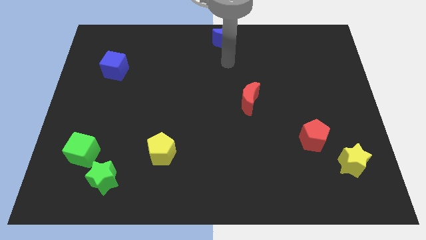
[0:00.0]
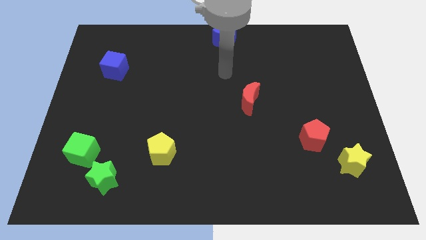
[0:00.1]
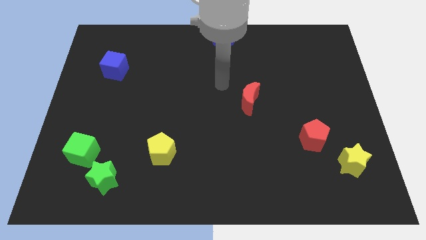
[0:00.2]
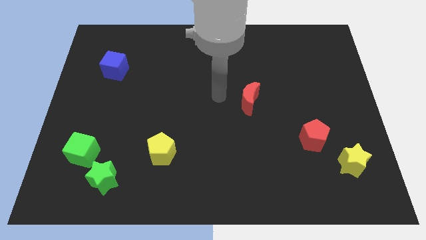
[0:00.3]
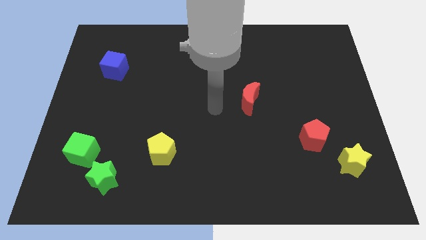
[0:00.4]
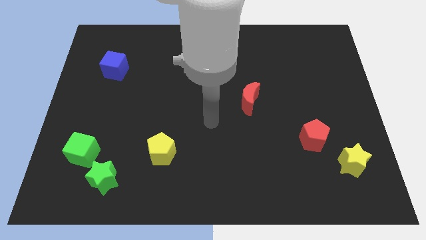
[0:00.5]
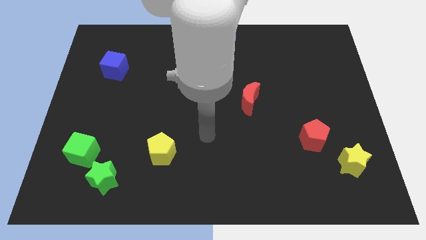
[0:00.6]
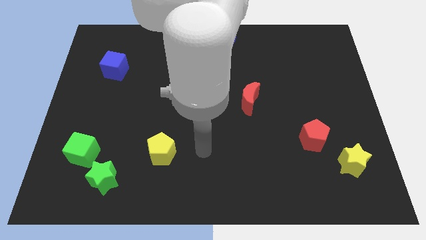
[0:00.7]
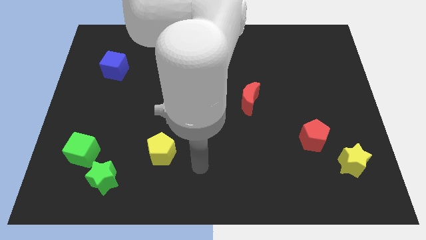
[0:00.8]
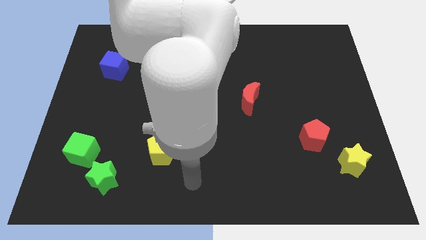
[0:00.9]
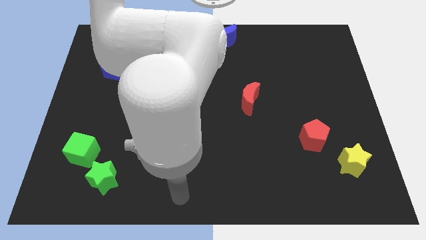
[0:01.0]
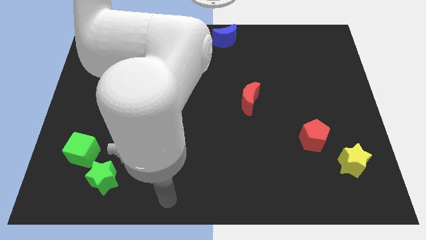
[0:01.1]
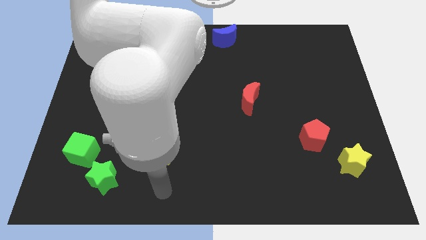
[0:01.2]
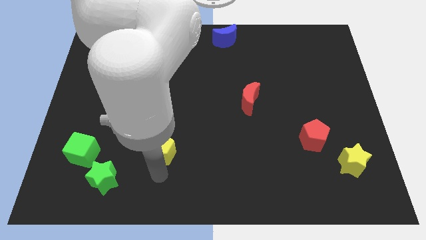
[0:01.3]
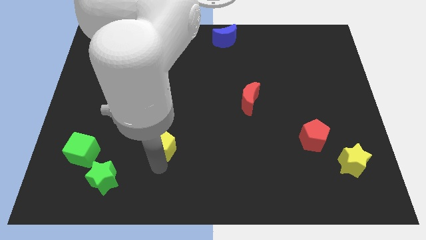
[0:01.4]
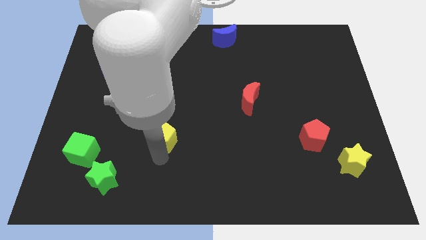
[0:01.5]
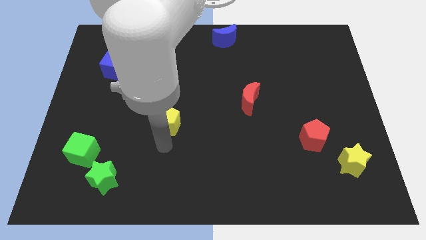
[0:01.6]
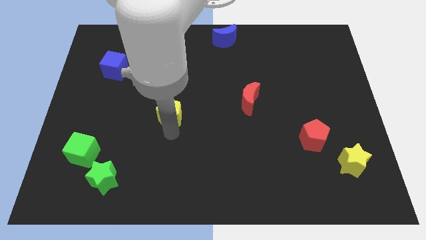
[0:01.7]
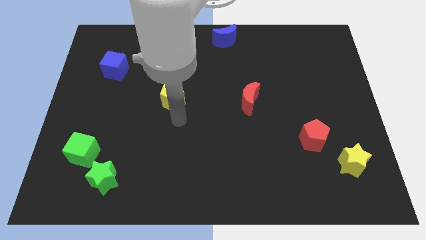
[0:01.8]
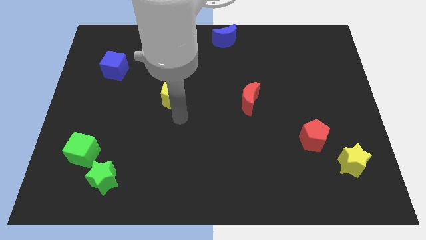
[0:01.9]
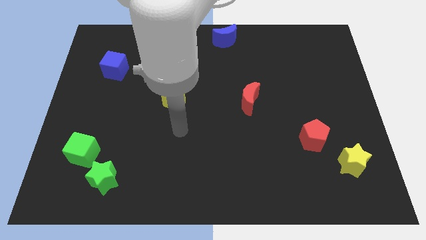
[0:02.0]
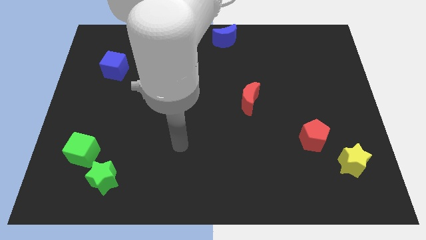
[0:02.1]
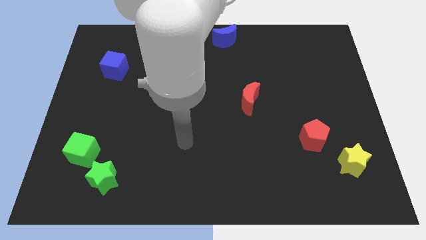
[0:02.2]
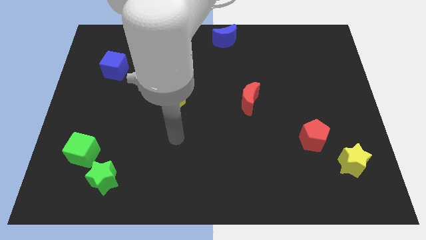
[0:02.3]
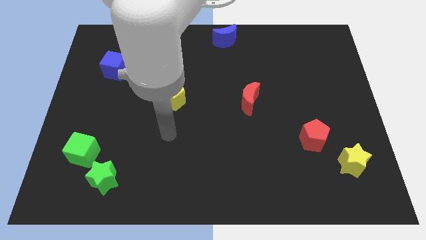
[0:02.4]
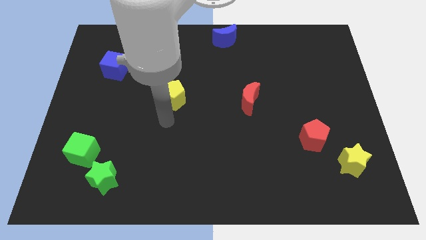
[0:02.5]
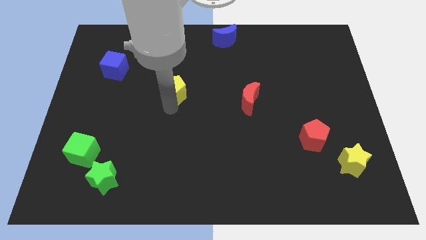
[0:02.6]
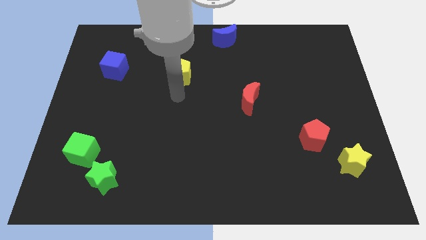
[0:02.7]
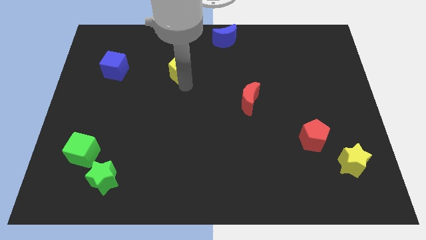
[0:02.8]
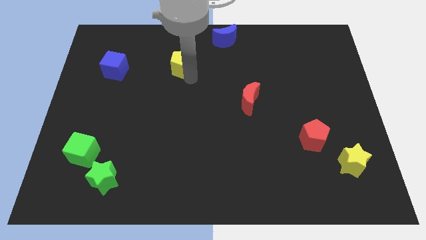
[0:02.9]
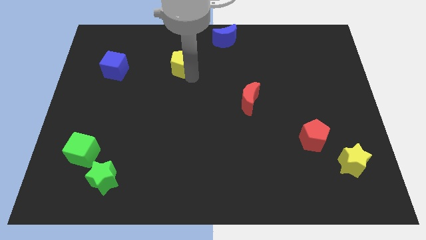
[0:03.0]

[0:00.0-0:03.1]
move the yellow pentagon towards top center of the board

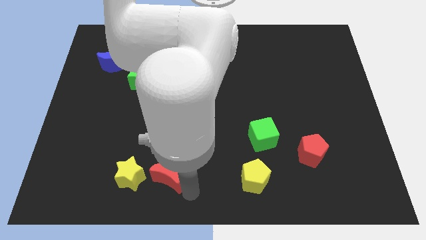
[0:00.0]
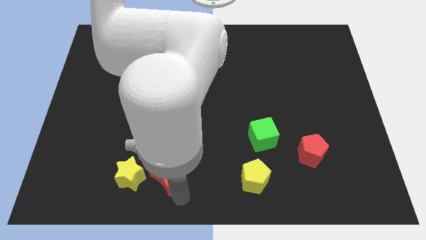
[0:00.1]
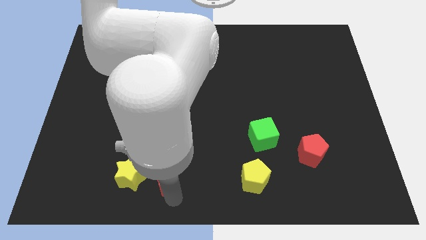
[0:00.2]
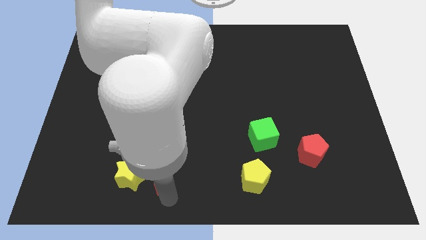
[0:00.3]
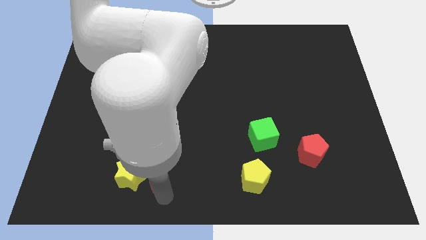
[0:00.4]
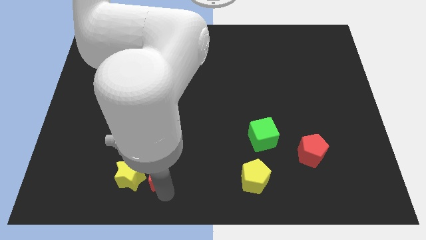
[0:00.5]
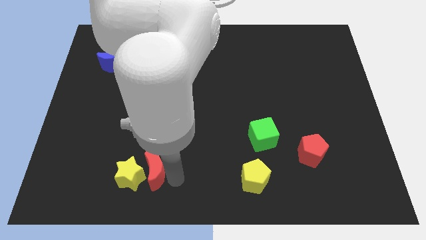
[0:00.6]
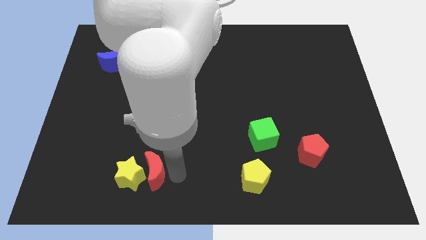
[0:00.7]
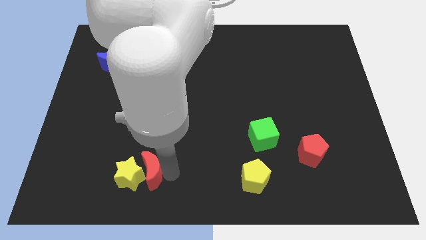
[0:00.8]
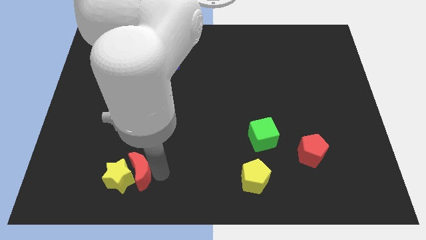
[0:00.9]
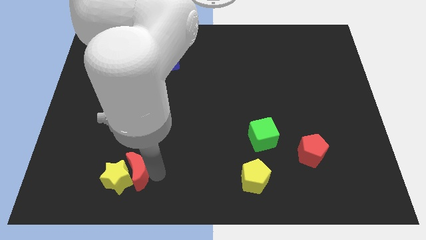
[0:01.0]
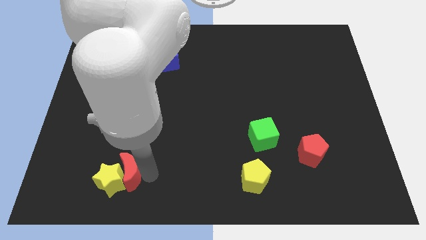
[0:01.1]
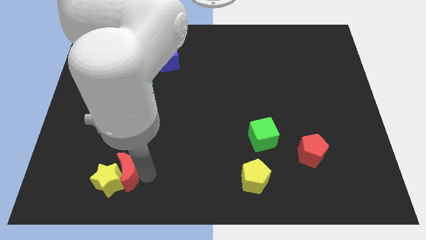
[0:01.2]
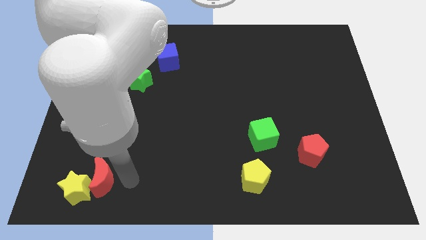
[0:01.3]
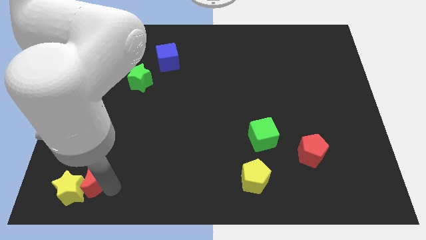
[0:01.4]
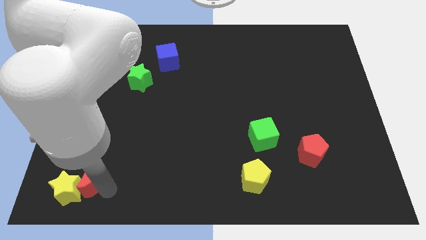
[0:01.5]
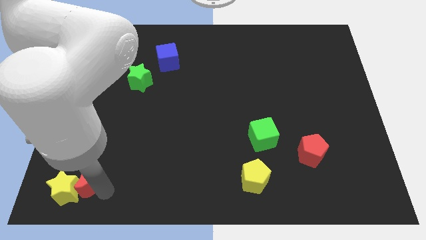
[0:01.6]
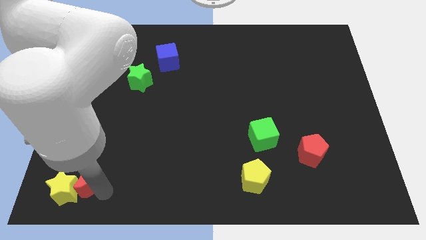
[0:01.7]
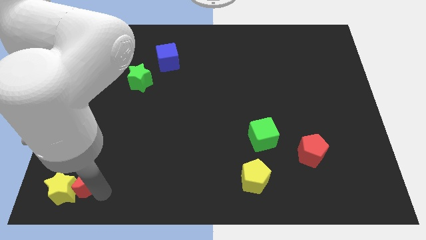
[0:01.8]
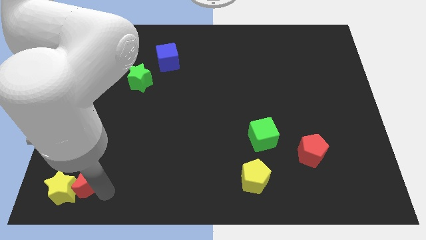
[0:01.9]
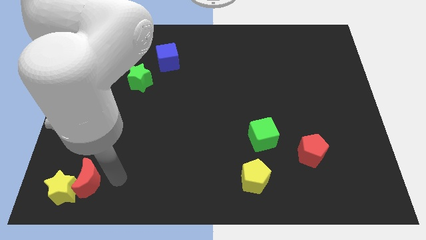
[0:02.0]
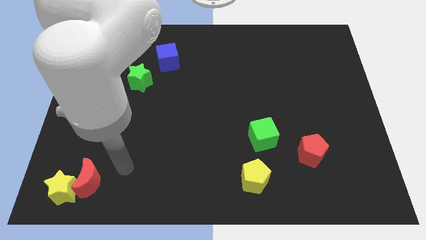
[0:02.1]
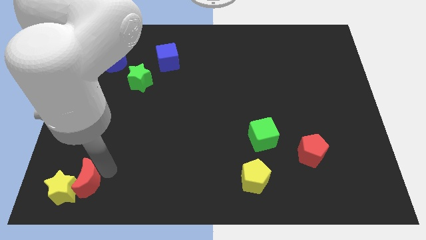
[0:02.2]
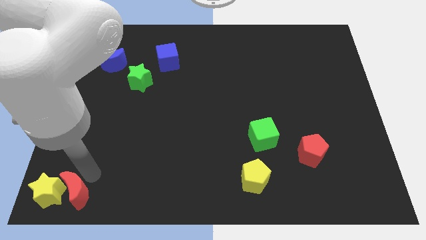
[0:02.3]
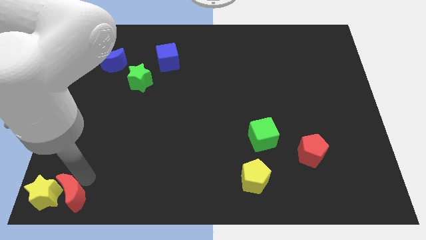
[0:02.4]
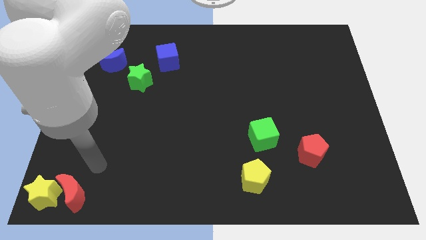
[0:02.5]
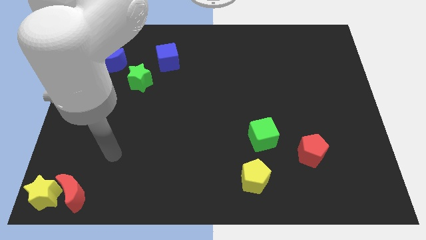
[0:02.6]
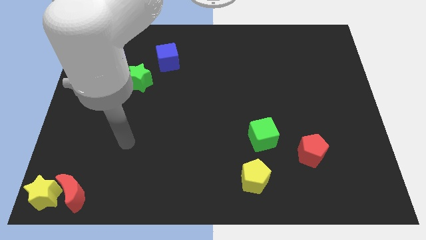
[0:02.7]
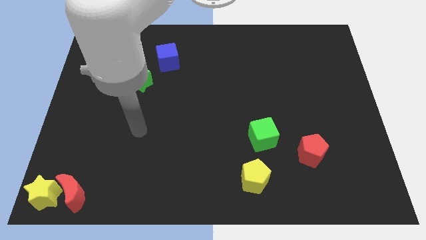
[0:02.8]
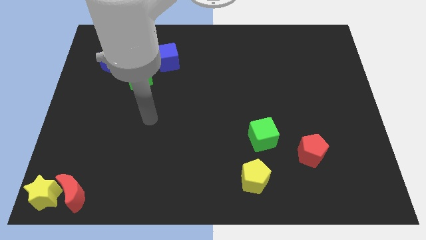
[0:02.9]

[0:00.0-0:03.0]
place the yellow star and red moon at the bottom left corner of the board

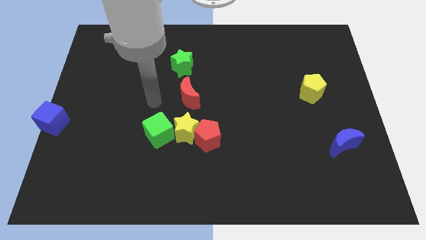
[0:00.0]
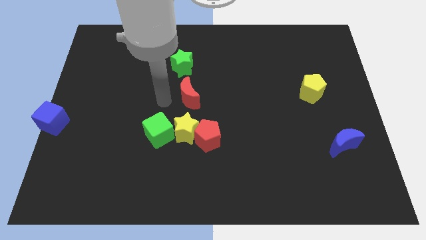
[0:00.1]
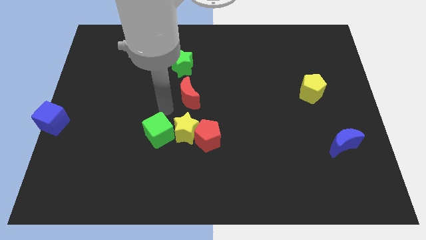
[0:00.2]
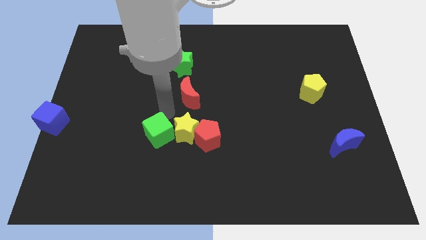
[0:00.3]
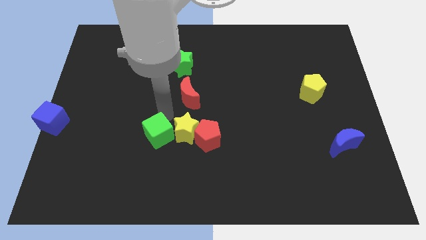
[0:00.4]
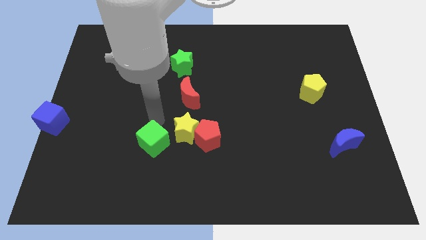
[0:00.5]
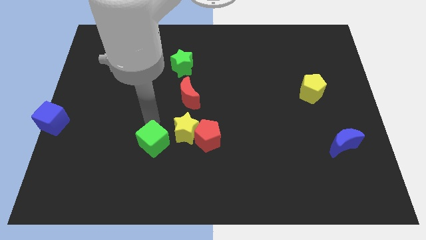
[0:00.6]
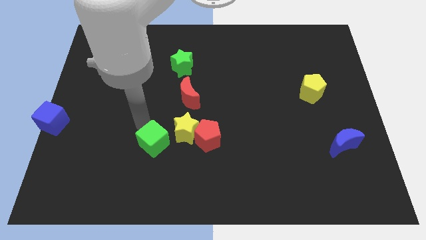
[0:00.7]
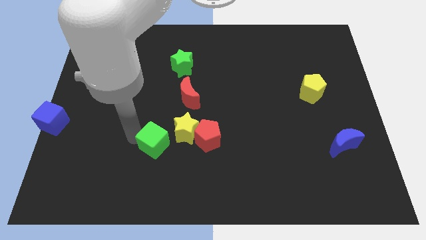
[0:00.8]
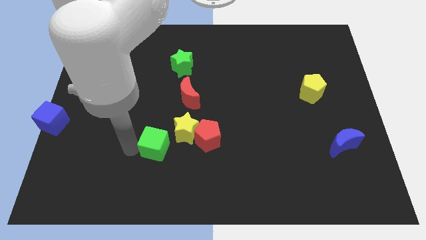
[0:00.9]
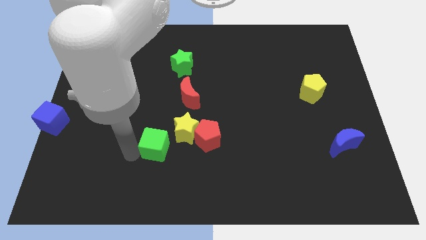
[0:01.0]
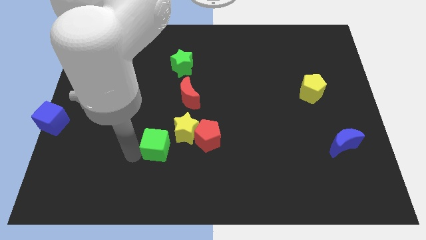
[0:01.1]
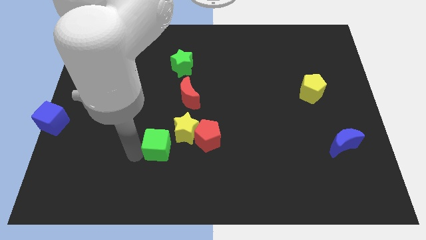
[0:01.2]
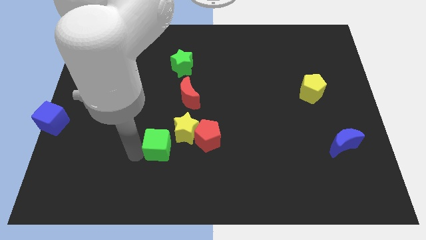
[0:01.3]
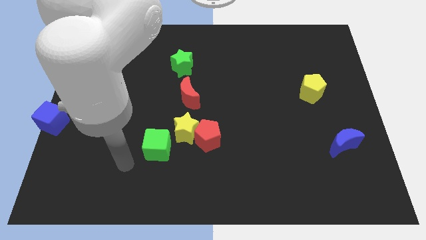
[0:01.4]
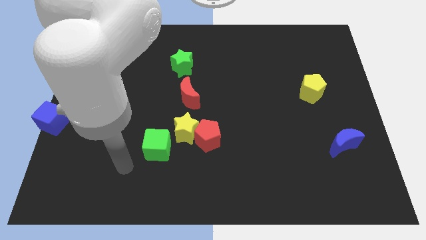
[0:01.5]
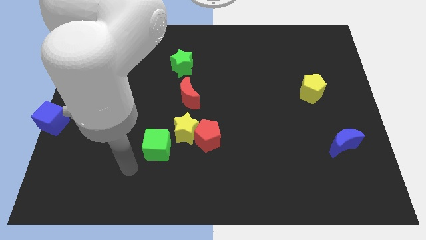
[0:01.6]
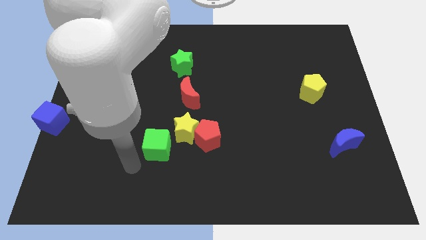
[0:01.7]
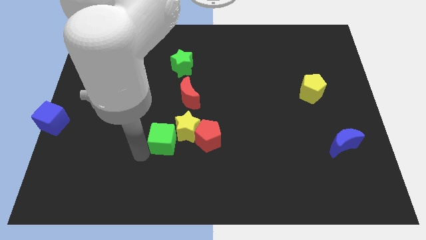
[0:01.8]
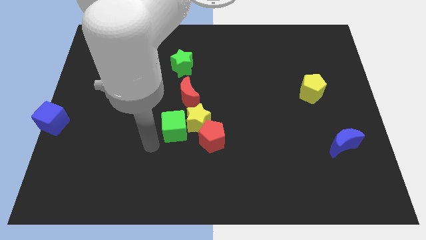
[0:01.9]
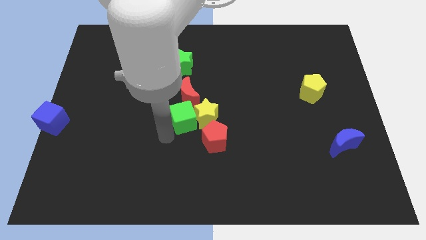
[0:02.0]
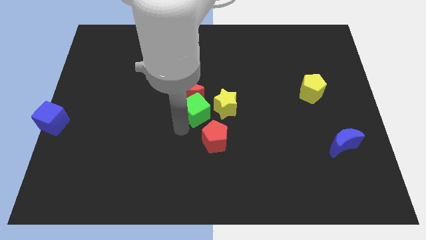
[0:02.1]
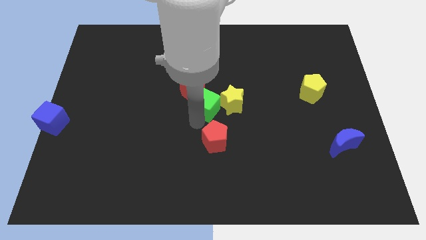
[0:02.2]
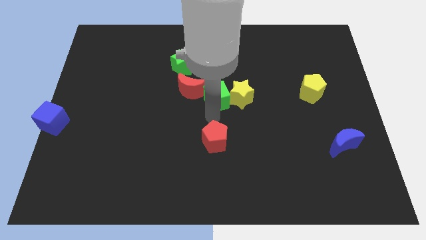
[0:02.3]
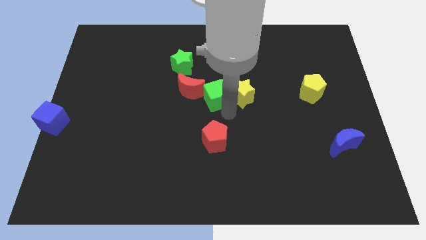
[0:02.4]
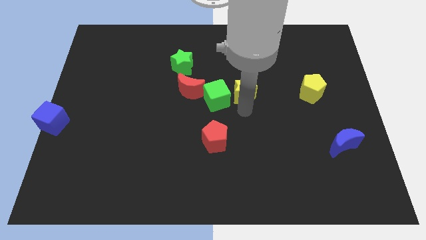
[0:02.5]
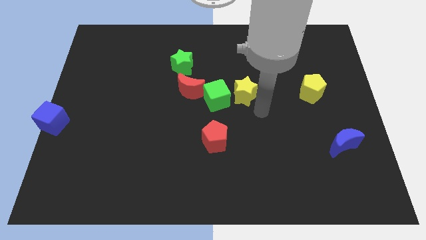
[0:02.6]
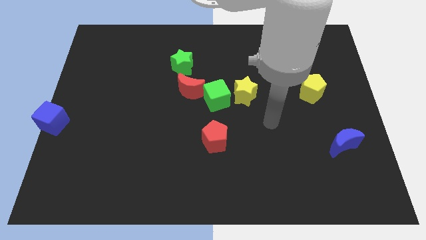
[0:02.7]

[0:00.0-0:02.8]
push the green cube and yellow star towards the left side of the yellow pentagon
